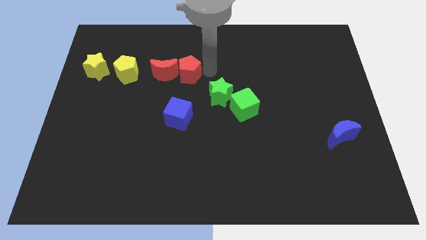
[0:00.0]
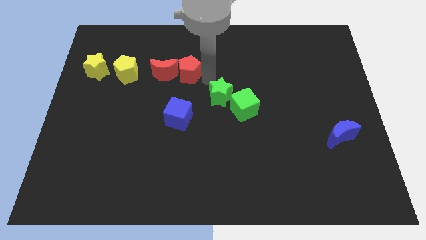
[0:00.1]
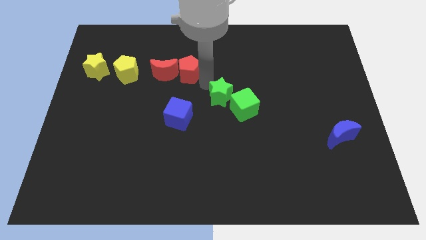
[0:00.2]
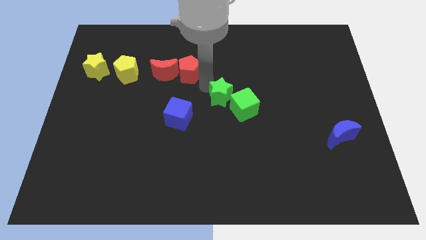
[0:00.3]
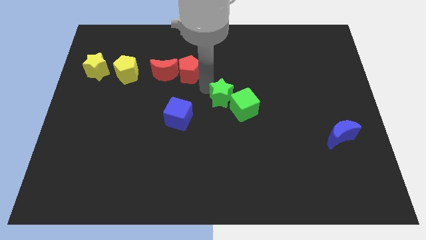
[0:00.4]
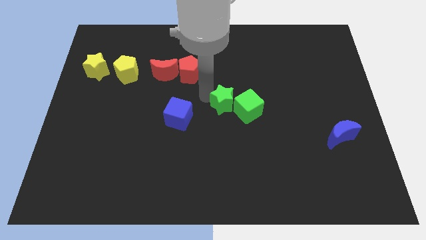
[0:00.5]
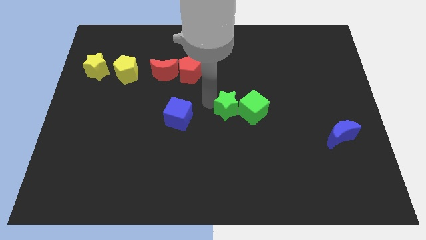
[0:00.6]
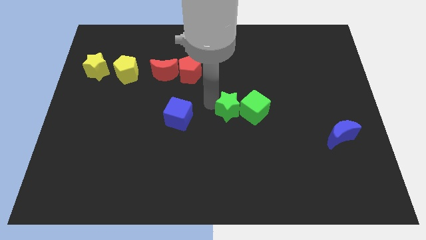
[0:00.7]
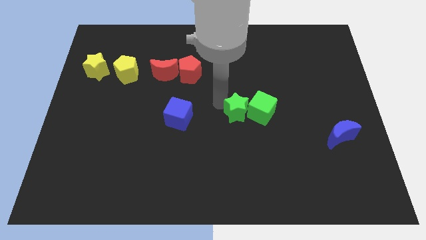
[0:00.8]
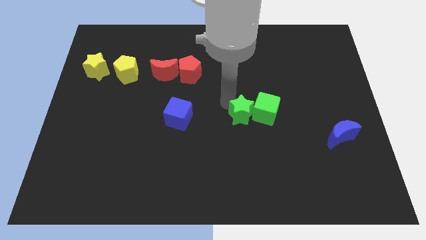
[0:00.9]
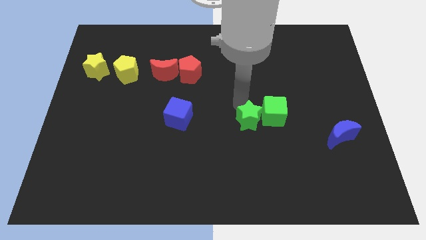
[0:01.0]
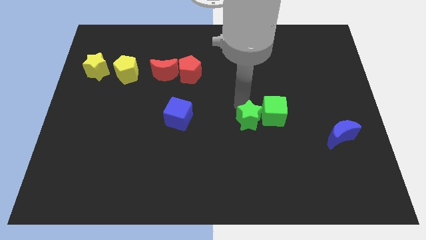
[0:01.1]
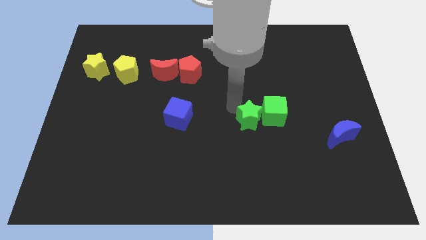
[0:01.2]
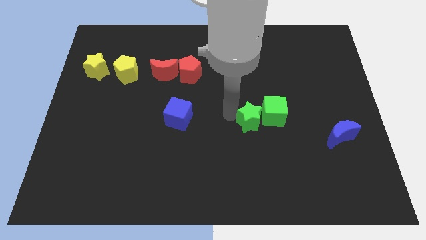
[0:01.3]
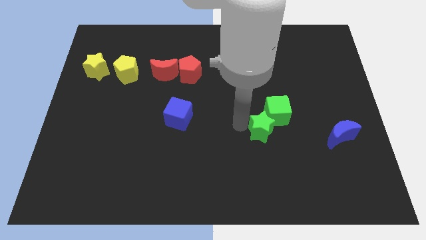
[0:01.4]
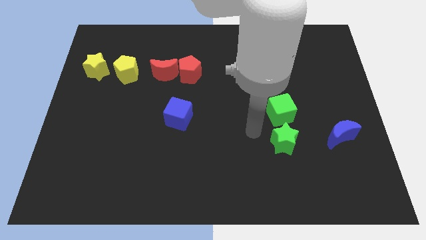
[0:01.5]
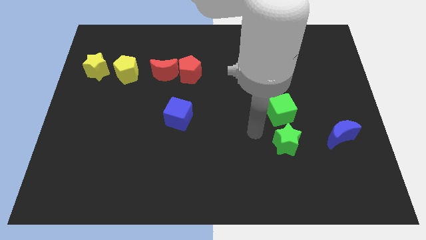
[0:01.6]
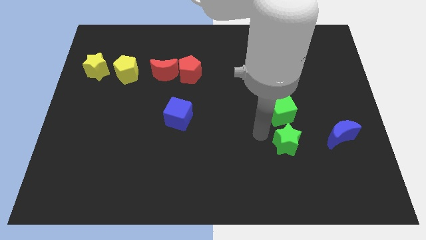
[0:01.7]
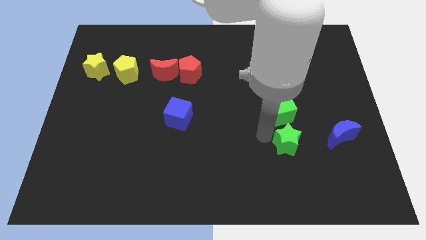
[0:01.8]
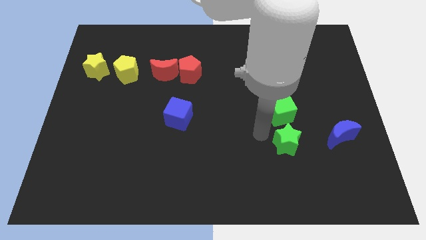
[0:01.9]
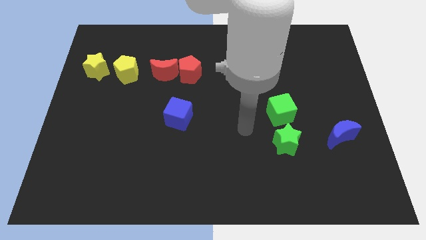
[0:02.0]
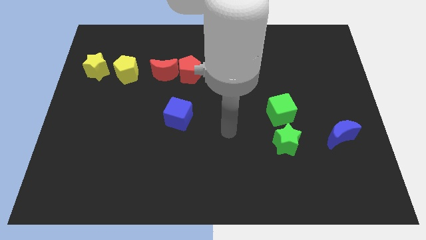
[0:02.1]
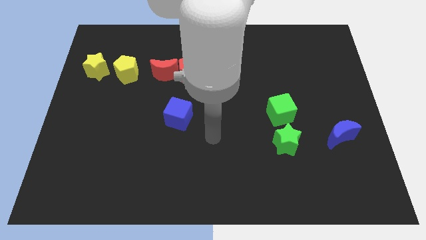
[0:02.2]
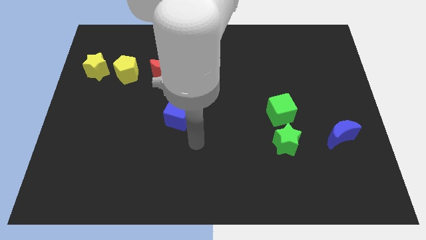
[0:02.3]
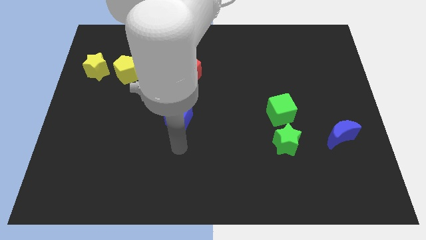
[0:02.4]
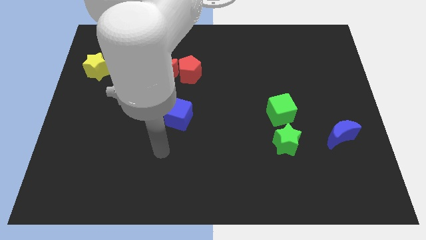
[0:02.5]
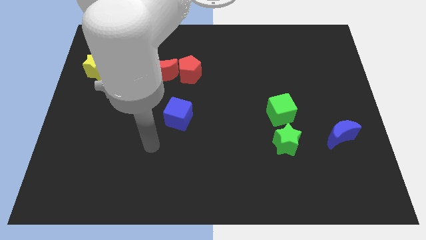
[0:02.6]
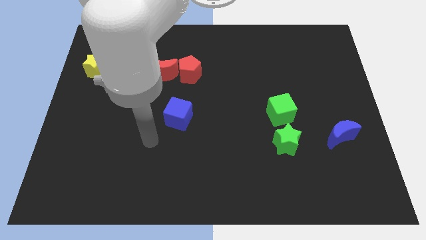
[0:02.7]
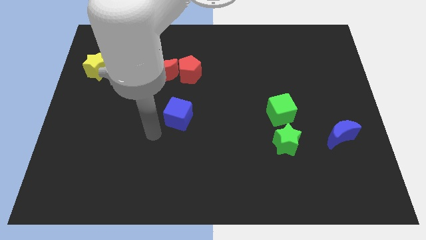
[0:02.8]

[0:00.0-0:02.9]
move the green star below the green cube

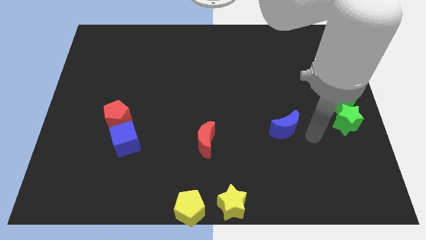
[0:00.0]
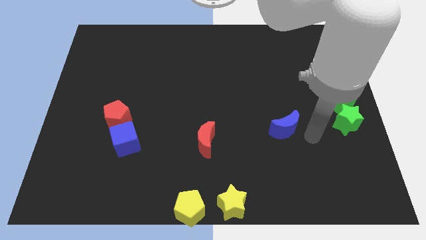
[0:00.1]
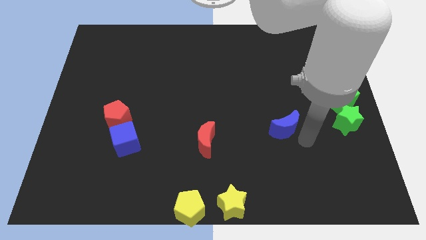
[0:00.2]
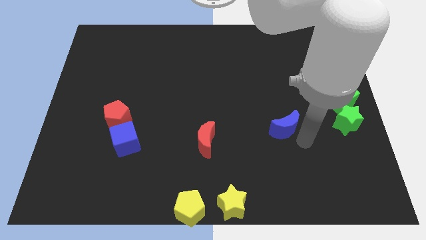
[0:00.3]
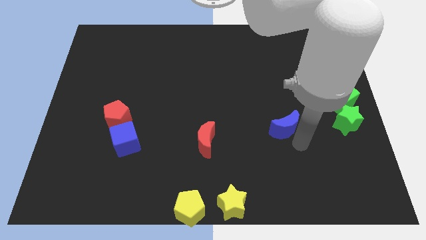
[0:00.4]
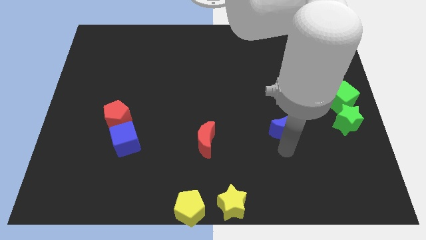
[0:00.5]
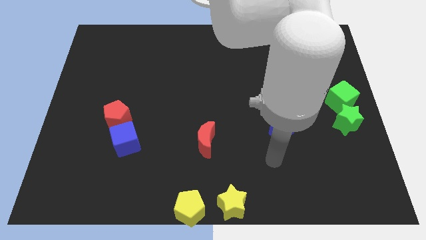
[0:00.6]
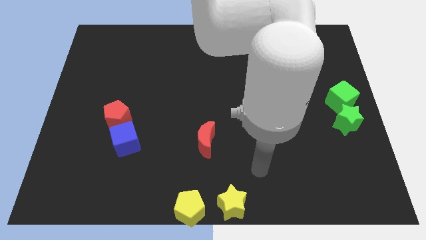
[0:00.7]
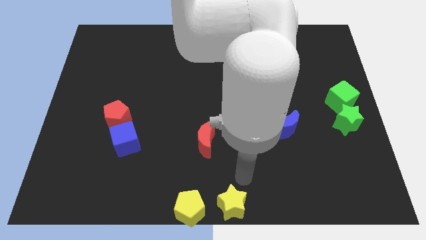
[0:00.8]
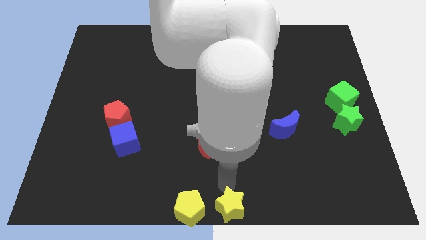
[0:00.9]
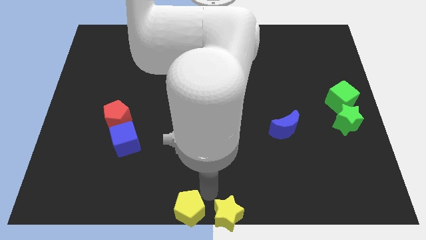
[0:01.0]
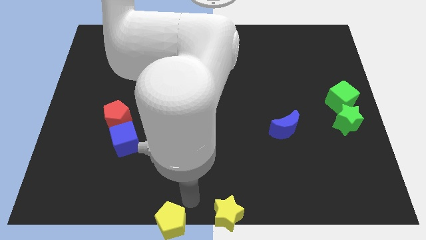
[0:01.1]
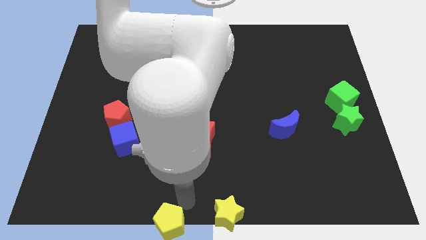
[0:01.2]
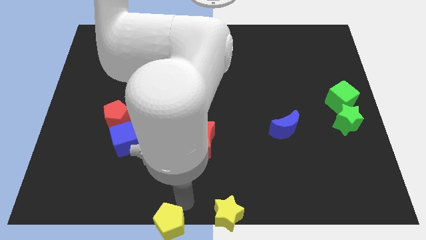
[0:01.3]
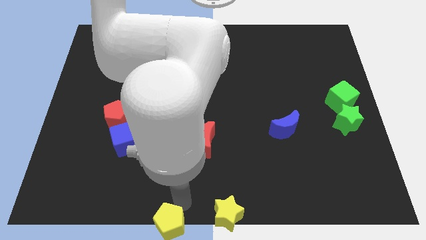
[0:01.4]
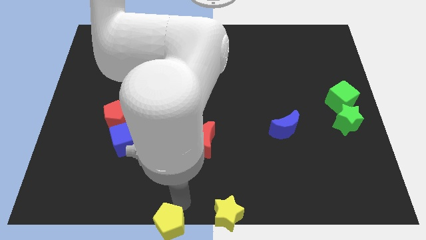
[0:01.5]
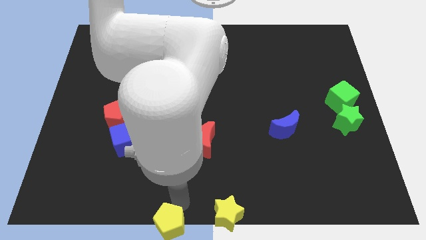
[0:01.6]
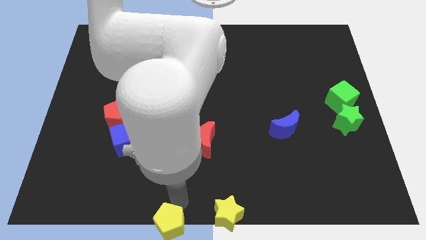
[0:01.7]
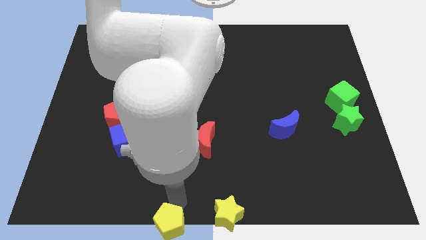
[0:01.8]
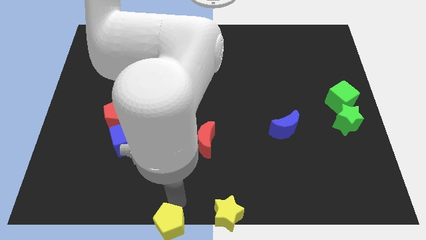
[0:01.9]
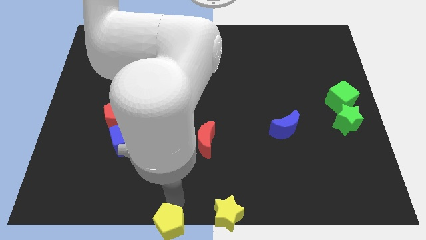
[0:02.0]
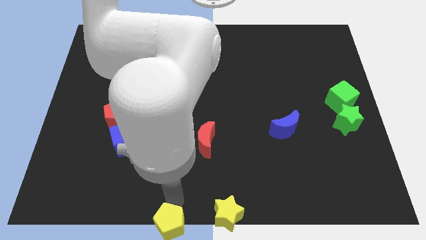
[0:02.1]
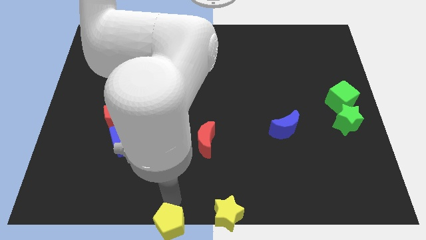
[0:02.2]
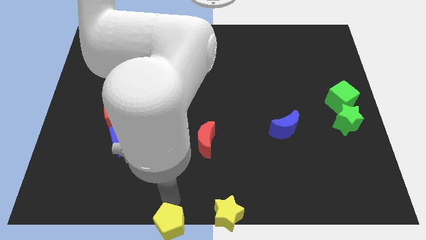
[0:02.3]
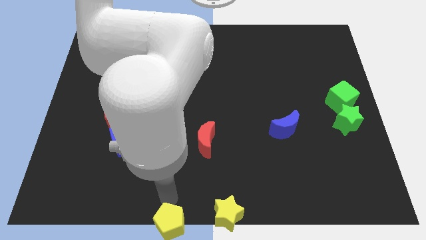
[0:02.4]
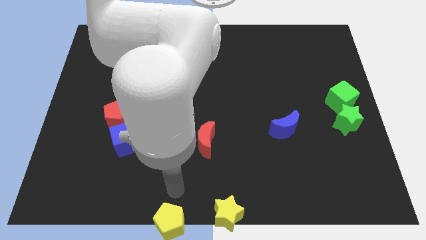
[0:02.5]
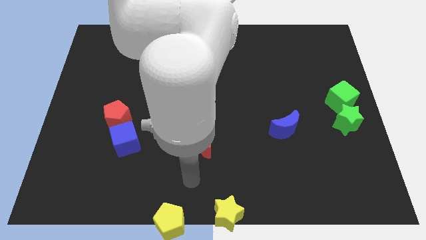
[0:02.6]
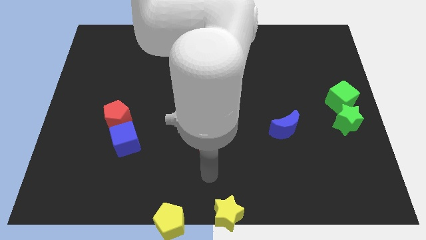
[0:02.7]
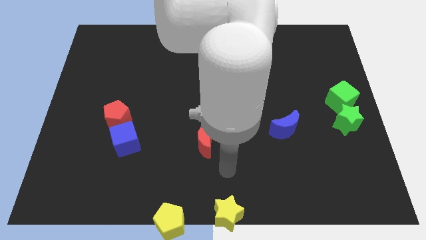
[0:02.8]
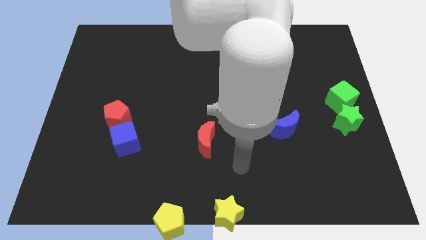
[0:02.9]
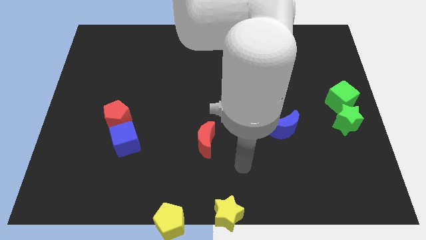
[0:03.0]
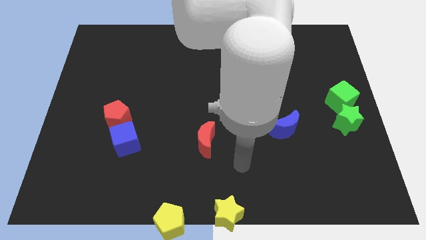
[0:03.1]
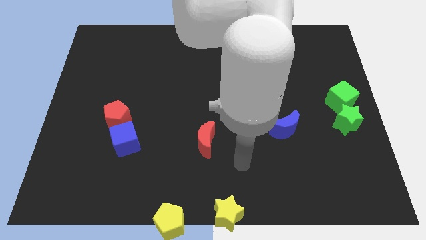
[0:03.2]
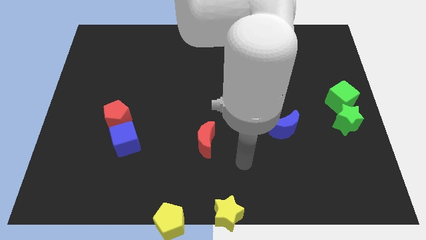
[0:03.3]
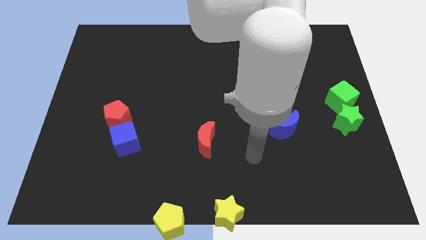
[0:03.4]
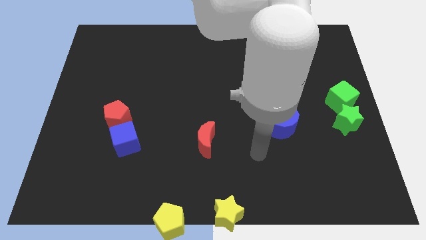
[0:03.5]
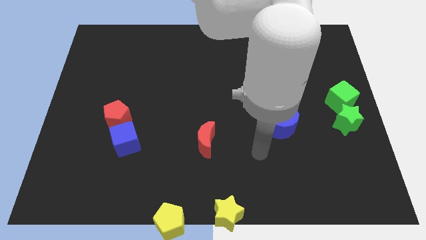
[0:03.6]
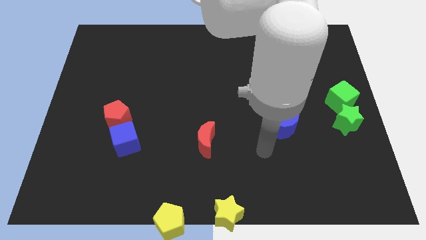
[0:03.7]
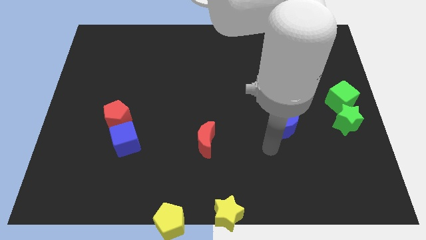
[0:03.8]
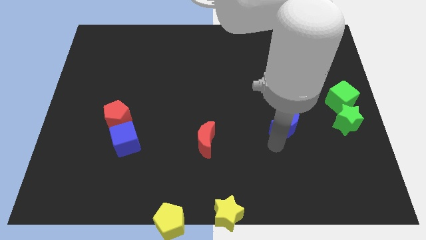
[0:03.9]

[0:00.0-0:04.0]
move the yellow star and the yellow pentagon down slightly

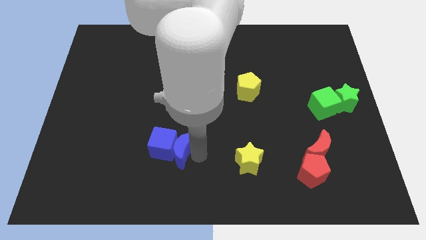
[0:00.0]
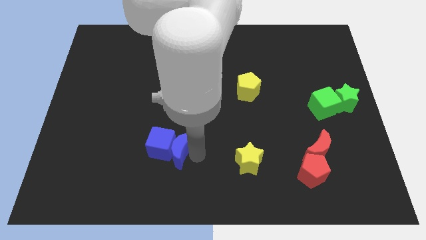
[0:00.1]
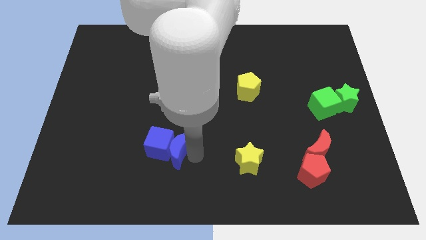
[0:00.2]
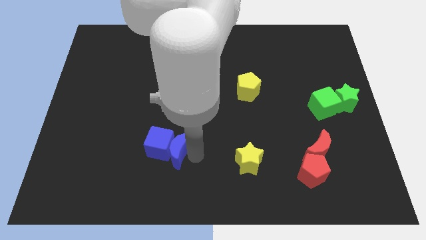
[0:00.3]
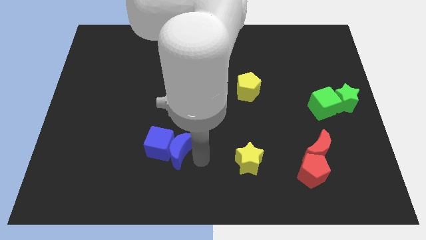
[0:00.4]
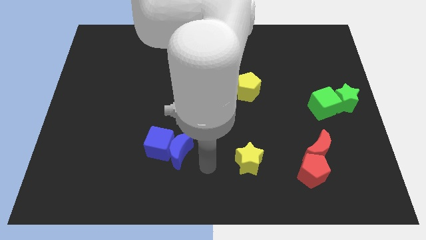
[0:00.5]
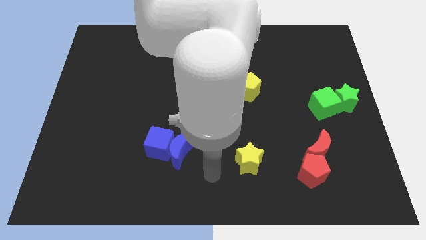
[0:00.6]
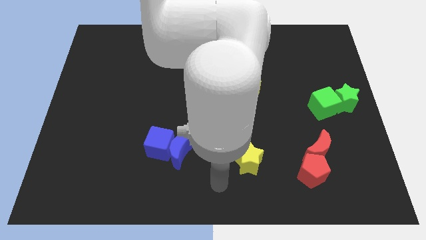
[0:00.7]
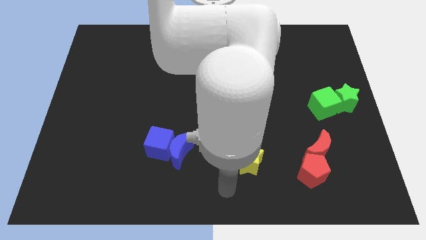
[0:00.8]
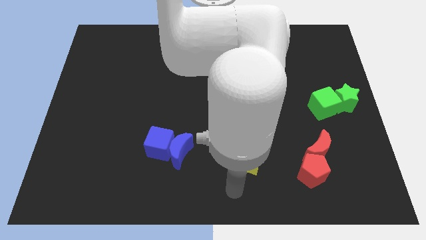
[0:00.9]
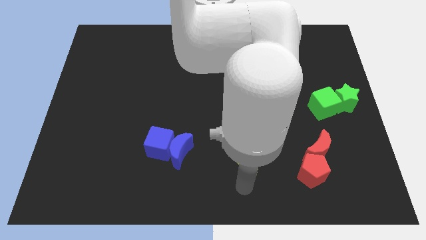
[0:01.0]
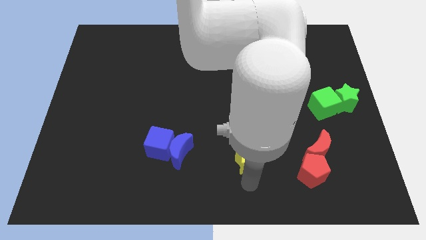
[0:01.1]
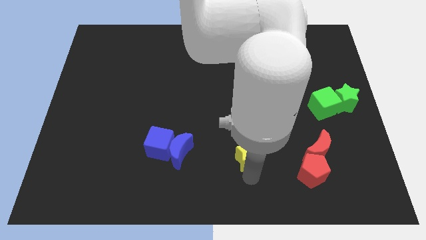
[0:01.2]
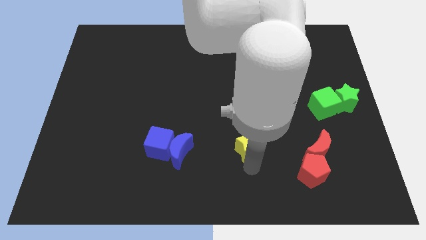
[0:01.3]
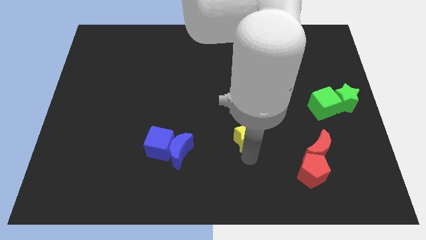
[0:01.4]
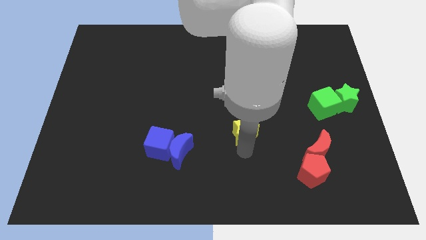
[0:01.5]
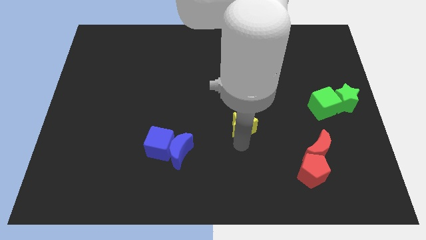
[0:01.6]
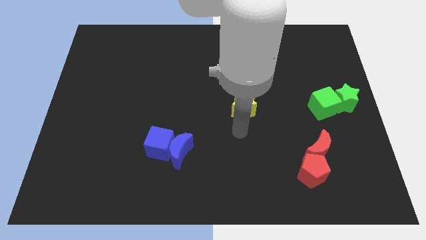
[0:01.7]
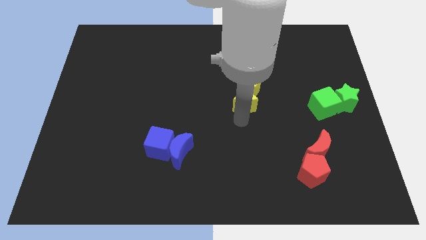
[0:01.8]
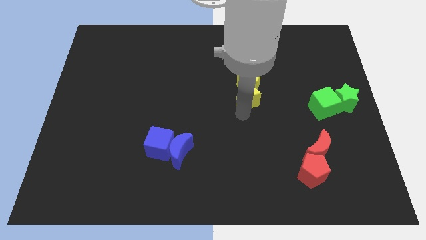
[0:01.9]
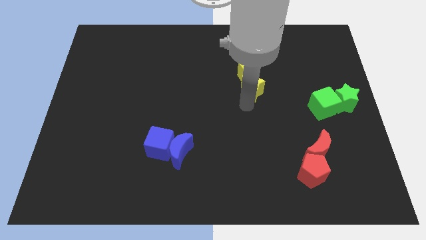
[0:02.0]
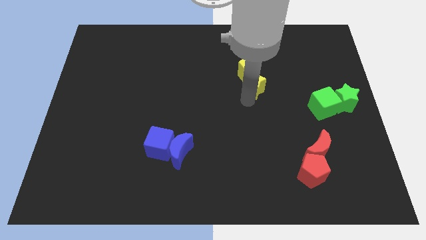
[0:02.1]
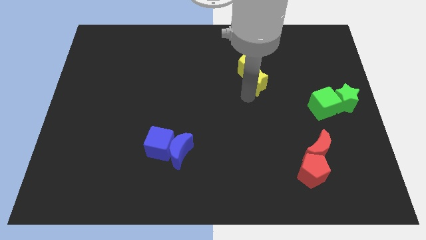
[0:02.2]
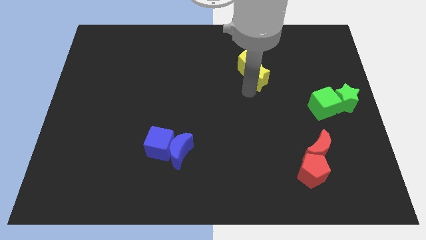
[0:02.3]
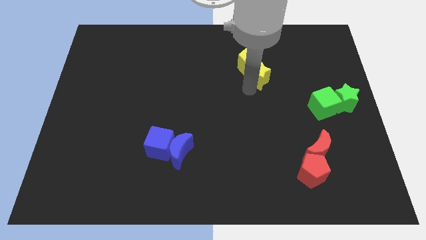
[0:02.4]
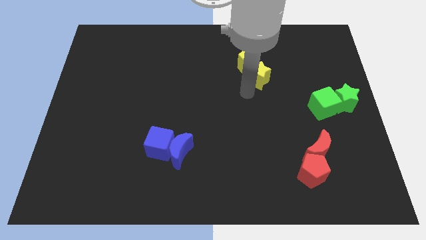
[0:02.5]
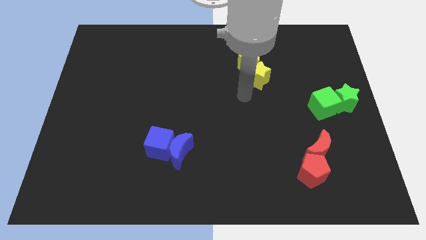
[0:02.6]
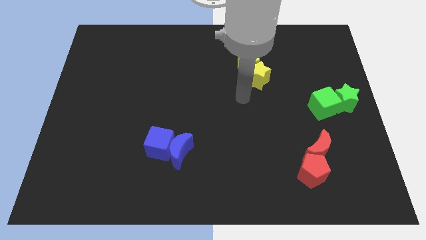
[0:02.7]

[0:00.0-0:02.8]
place the yellow star below the yellow pentagon
